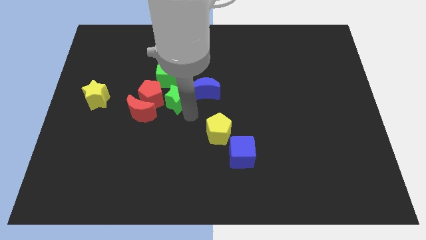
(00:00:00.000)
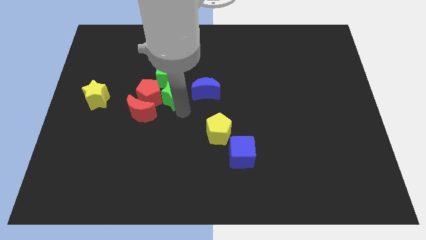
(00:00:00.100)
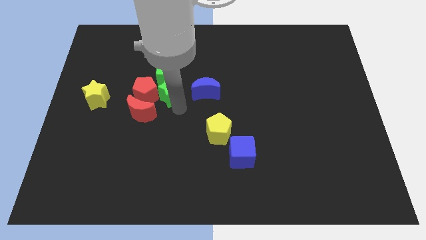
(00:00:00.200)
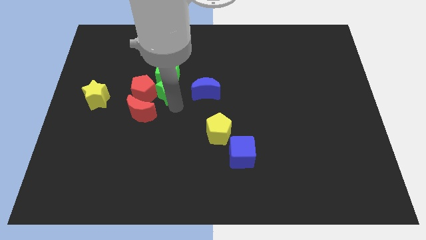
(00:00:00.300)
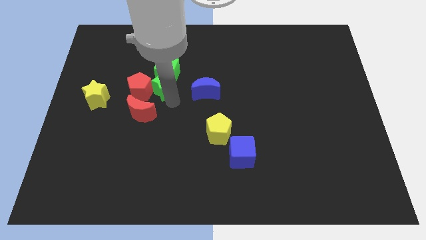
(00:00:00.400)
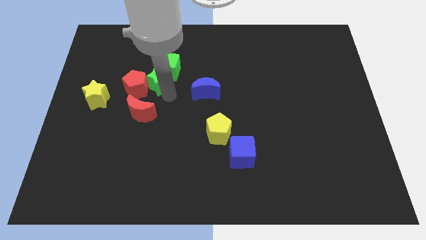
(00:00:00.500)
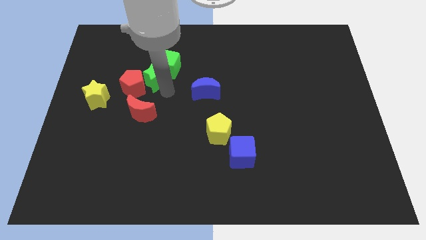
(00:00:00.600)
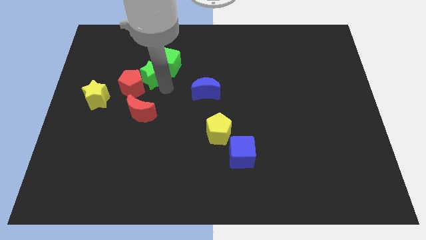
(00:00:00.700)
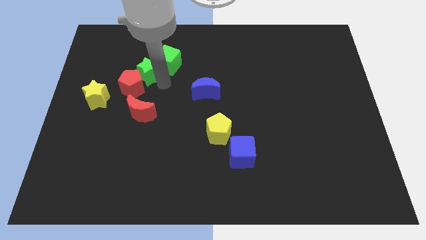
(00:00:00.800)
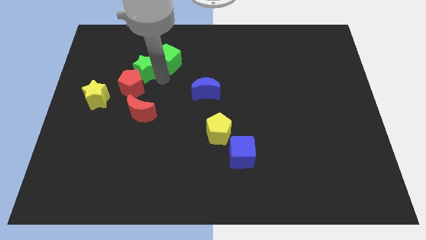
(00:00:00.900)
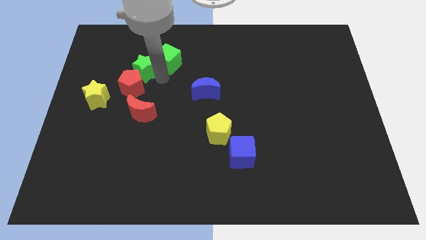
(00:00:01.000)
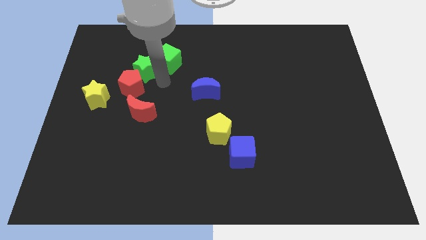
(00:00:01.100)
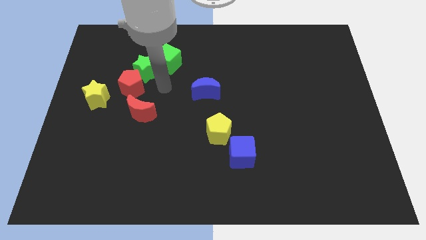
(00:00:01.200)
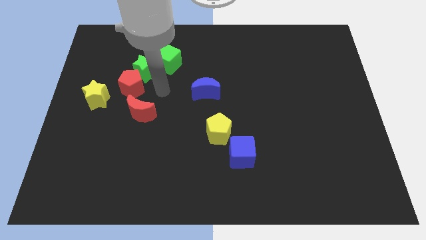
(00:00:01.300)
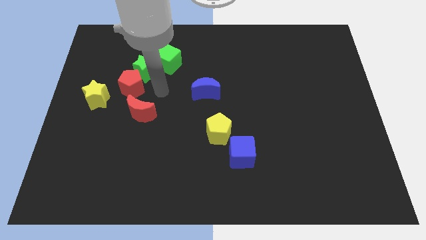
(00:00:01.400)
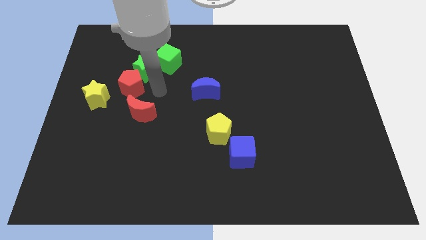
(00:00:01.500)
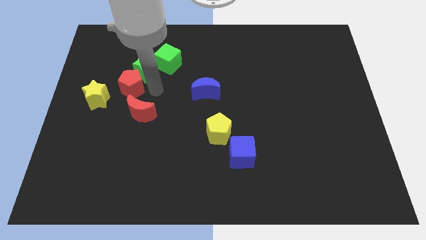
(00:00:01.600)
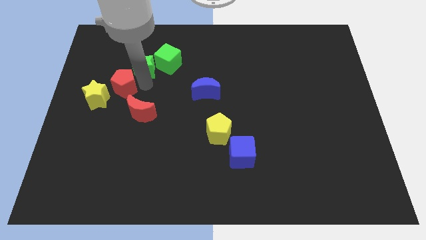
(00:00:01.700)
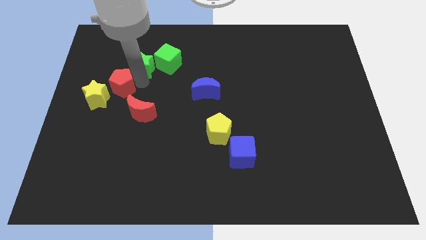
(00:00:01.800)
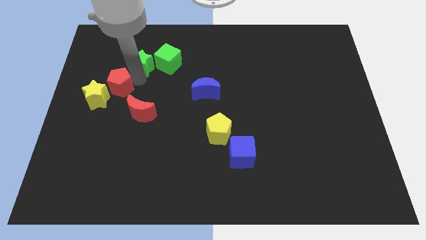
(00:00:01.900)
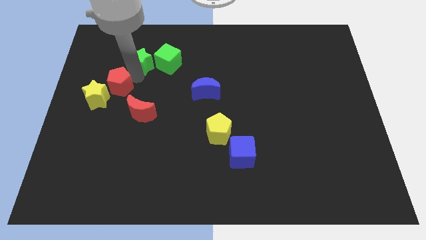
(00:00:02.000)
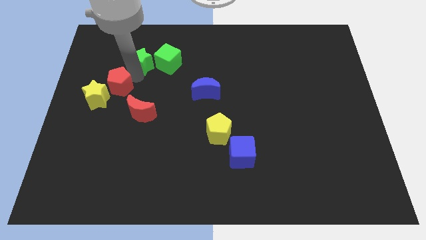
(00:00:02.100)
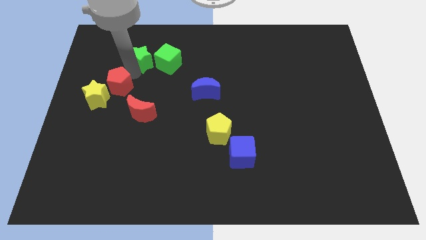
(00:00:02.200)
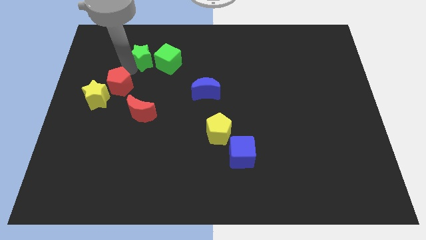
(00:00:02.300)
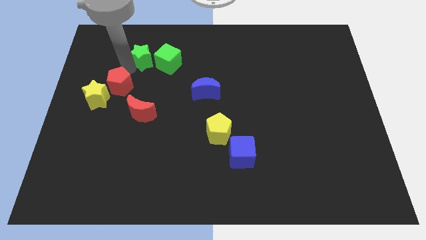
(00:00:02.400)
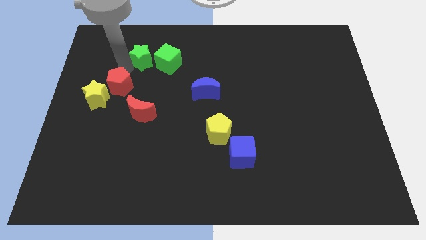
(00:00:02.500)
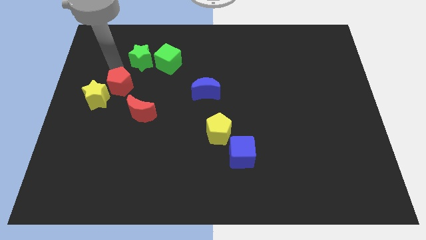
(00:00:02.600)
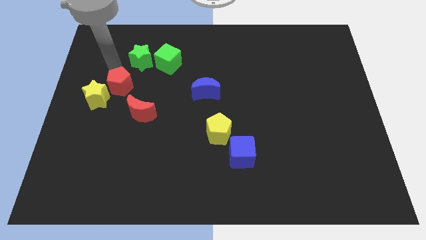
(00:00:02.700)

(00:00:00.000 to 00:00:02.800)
separate green star and red pentagon at the left top

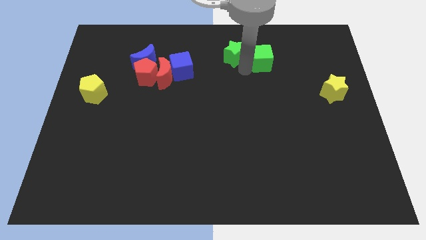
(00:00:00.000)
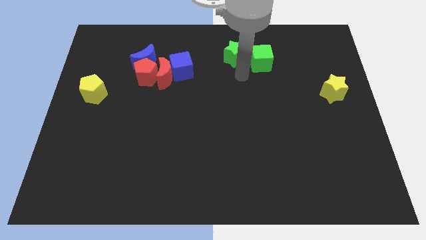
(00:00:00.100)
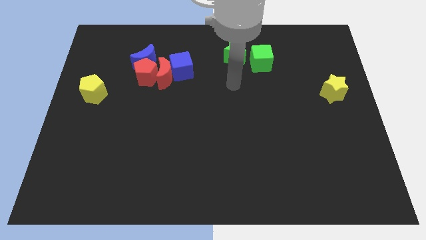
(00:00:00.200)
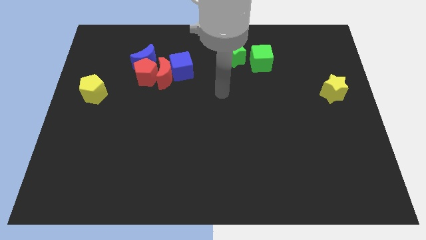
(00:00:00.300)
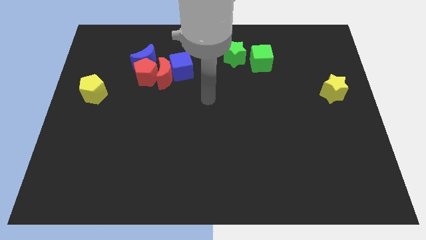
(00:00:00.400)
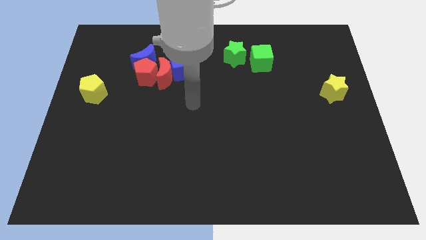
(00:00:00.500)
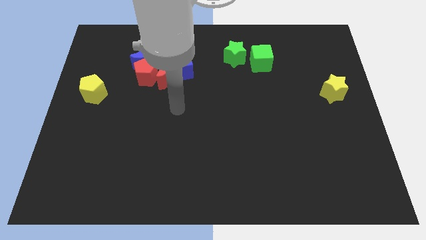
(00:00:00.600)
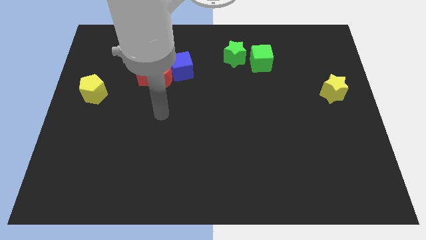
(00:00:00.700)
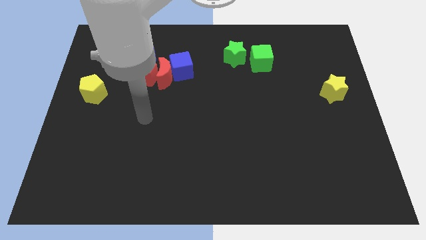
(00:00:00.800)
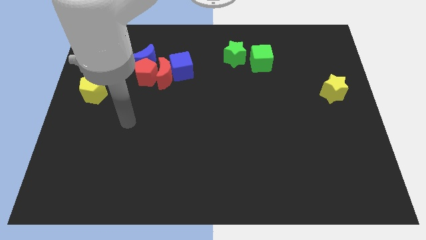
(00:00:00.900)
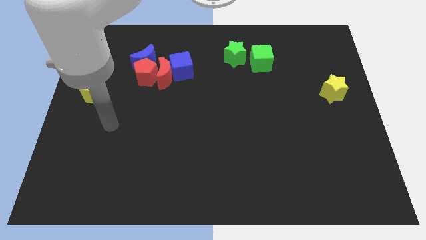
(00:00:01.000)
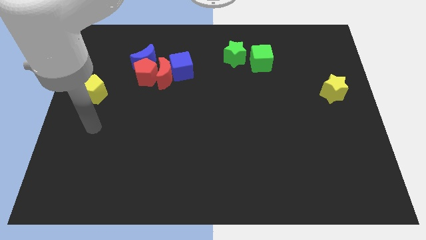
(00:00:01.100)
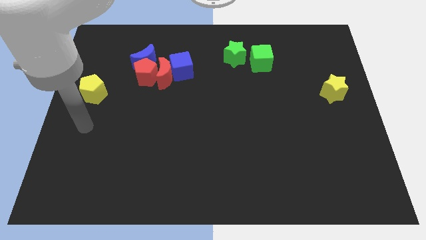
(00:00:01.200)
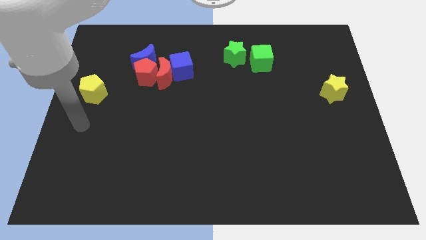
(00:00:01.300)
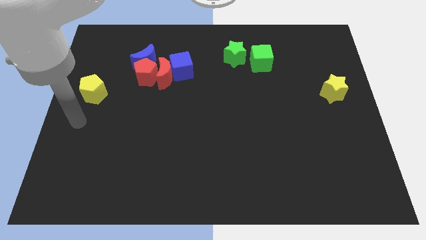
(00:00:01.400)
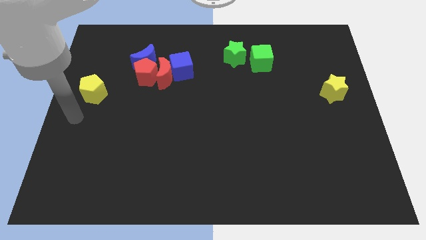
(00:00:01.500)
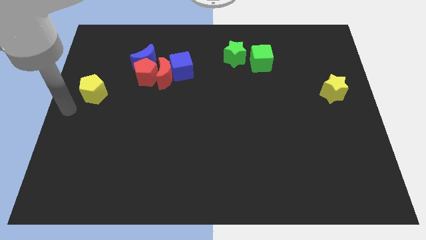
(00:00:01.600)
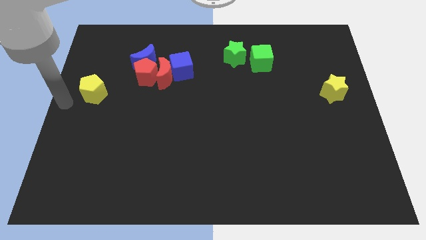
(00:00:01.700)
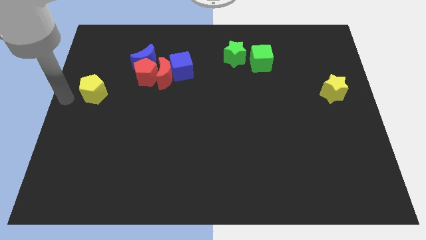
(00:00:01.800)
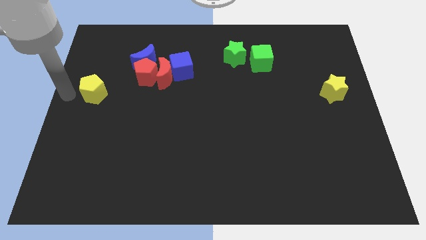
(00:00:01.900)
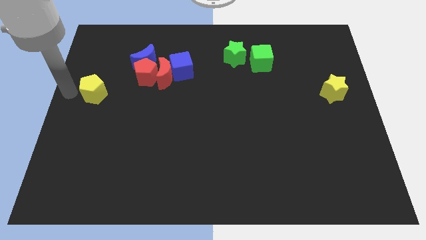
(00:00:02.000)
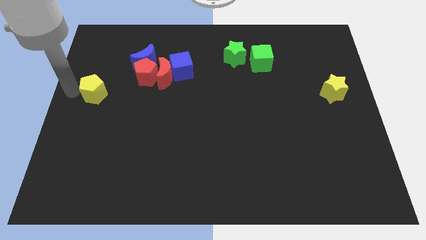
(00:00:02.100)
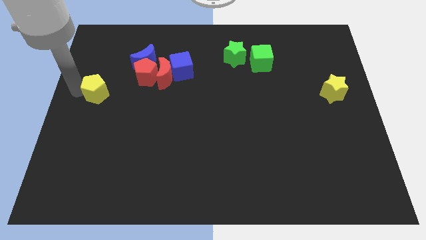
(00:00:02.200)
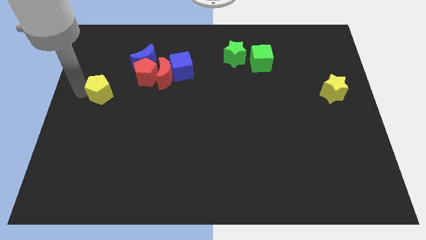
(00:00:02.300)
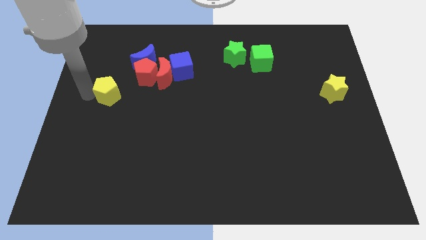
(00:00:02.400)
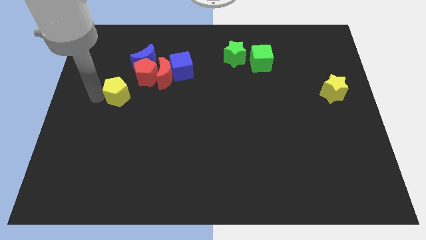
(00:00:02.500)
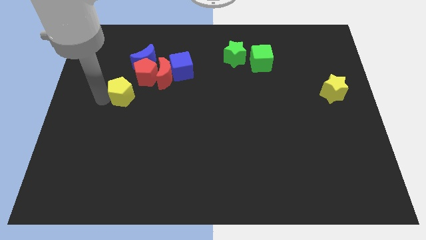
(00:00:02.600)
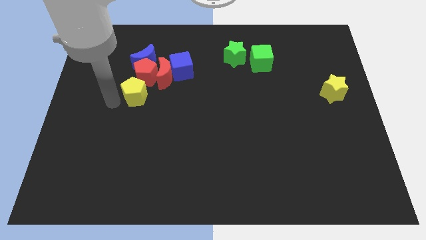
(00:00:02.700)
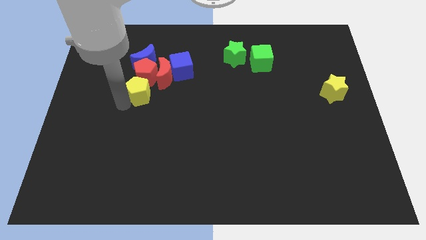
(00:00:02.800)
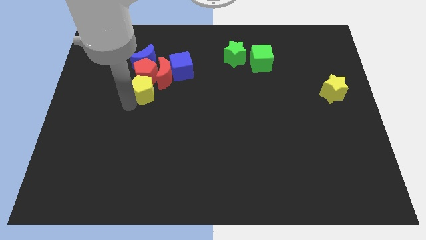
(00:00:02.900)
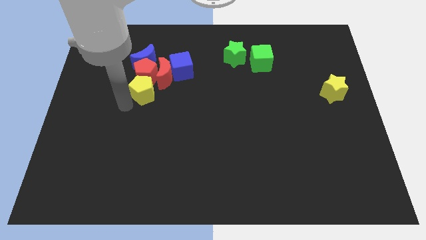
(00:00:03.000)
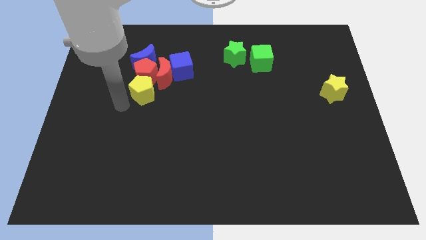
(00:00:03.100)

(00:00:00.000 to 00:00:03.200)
bring the yellow pentagon at the bottom side of the red pentagon

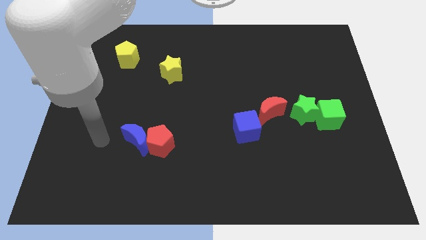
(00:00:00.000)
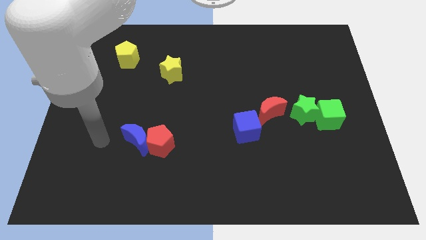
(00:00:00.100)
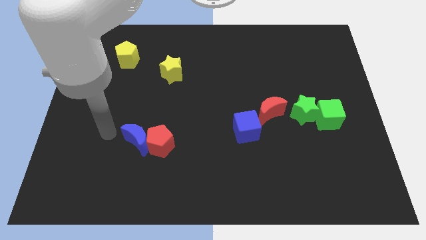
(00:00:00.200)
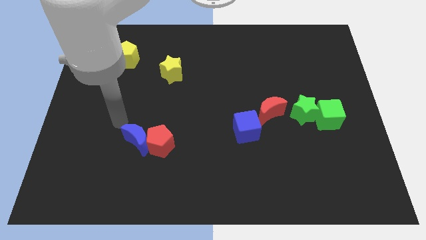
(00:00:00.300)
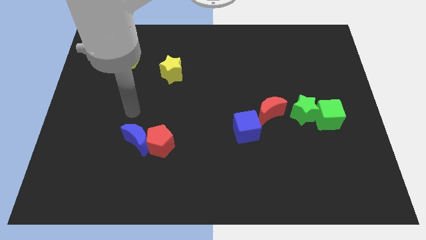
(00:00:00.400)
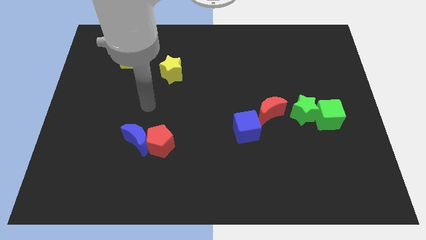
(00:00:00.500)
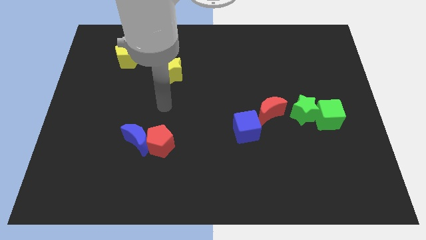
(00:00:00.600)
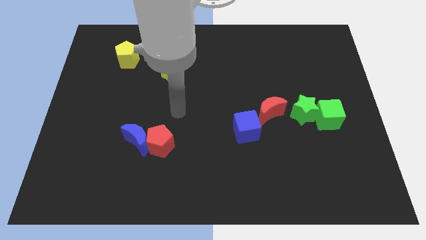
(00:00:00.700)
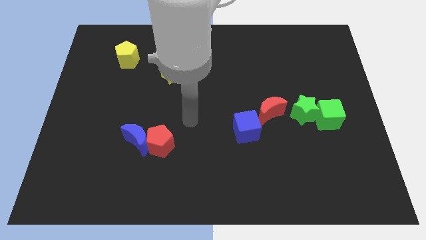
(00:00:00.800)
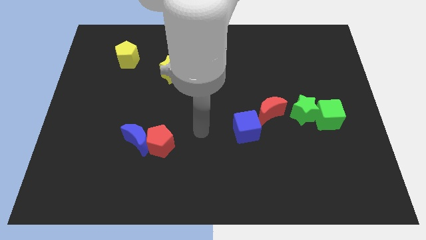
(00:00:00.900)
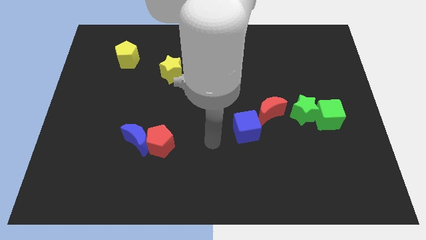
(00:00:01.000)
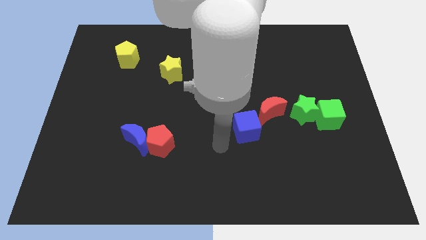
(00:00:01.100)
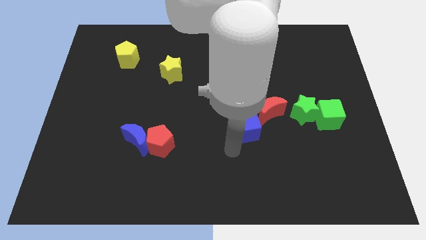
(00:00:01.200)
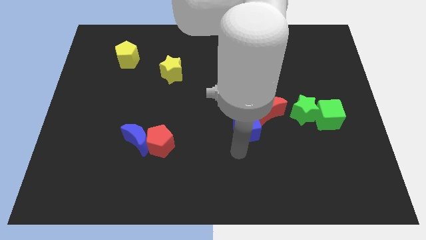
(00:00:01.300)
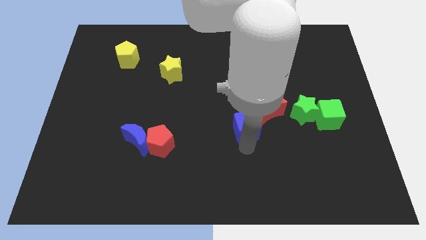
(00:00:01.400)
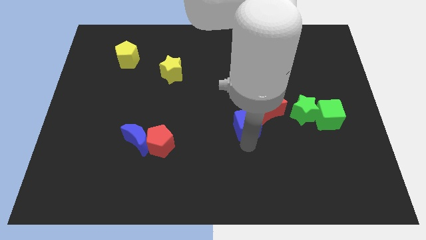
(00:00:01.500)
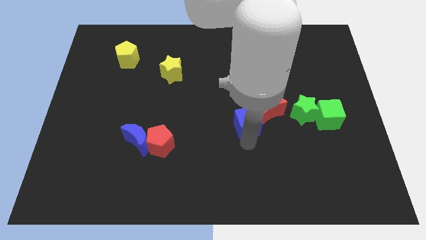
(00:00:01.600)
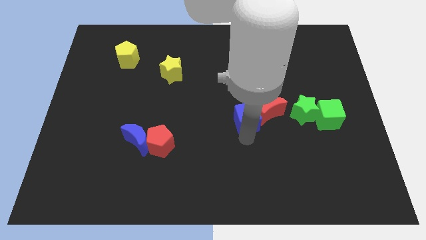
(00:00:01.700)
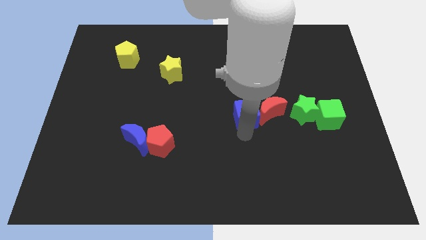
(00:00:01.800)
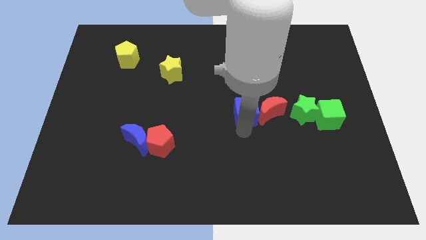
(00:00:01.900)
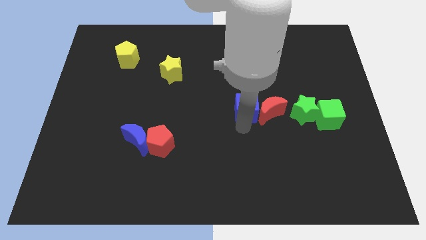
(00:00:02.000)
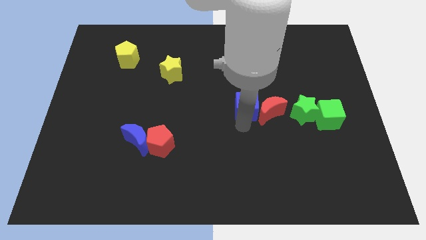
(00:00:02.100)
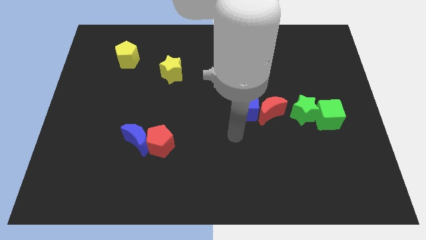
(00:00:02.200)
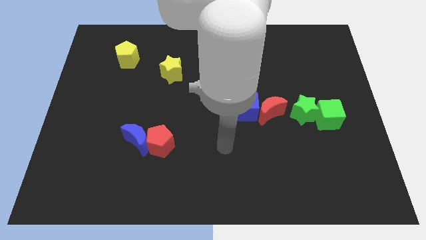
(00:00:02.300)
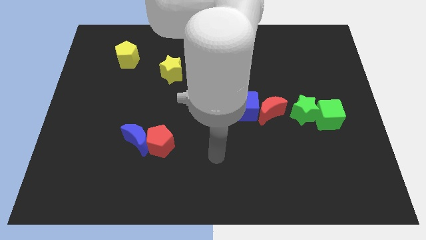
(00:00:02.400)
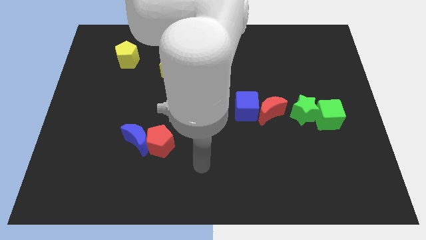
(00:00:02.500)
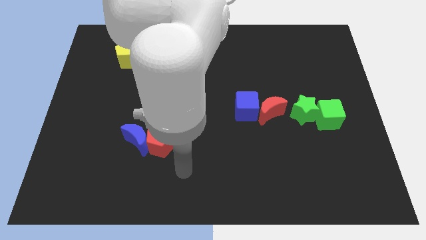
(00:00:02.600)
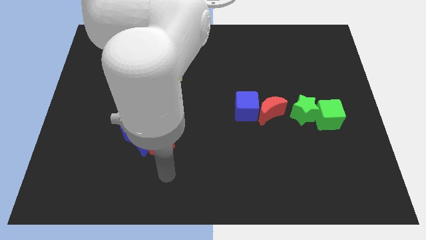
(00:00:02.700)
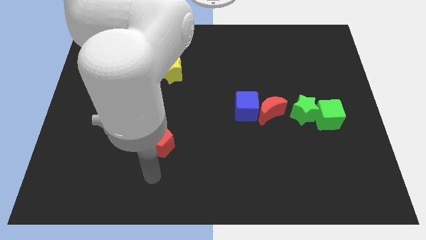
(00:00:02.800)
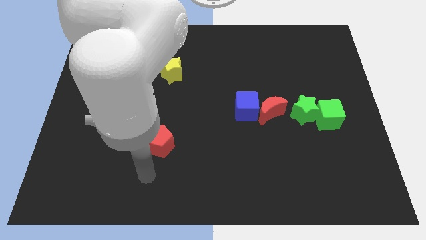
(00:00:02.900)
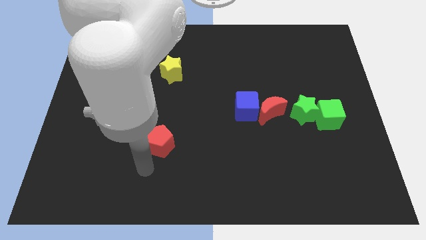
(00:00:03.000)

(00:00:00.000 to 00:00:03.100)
place blue cube left of red crescent
